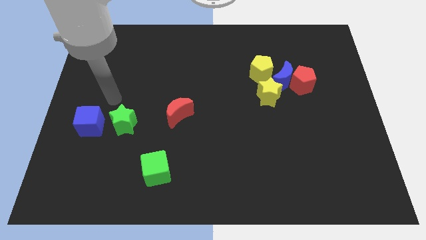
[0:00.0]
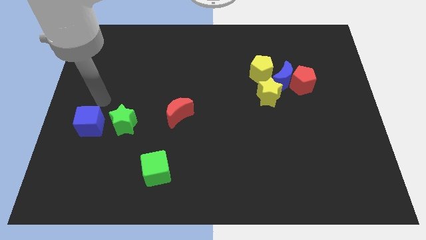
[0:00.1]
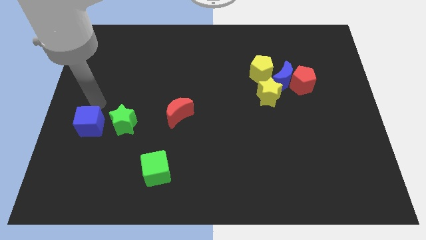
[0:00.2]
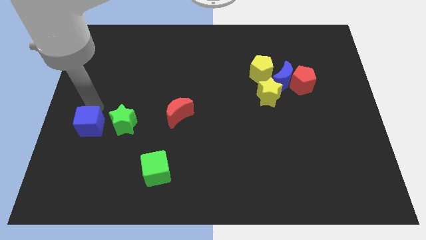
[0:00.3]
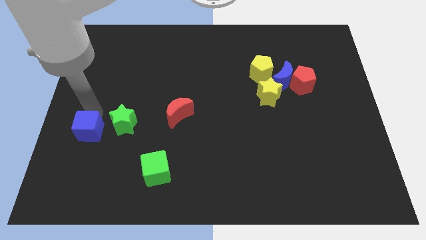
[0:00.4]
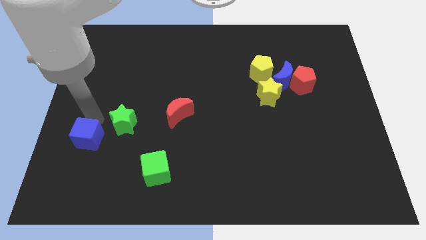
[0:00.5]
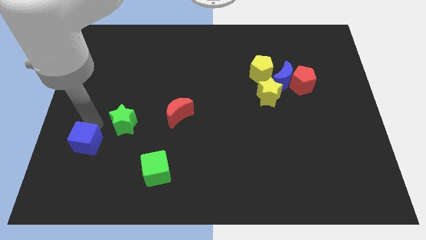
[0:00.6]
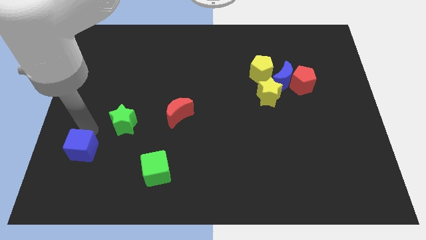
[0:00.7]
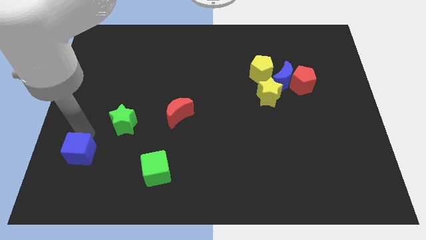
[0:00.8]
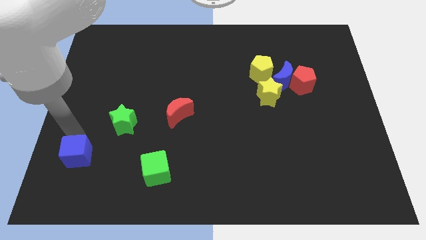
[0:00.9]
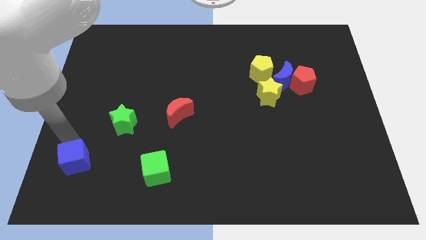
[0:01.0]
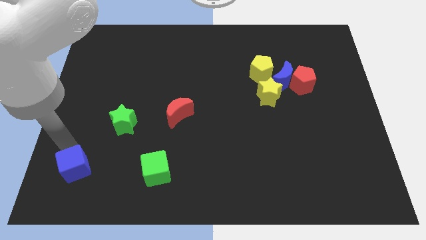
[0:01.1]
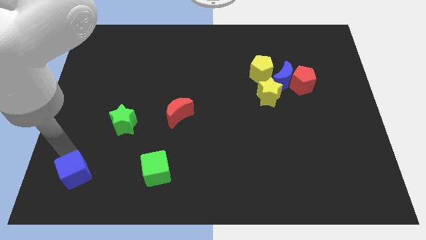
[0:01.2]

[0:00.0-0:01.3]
push the blue cube to the left of the green cube

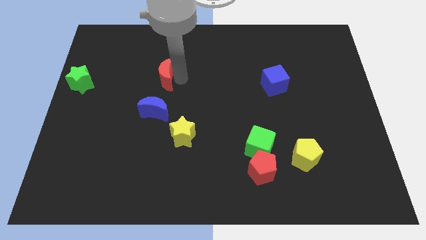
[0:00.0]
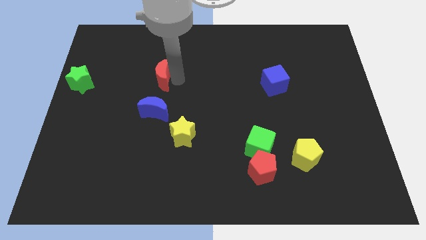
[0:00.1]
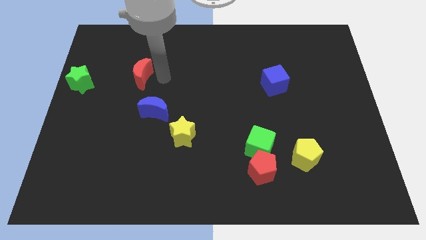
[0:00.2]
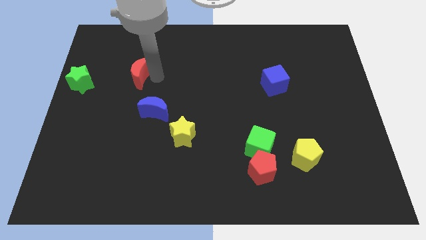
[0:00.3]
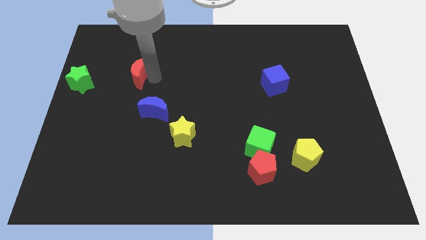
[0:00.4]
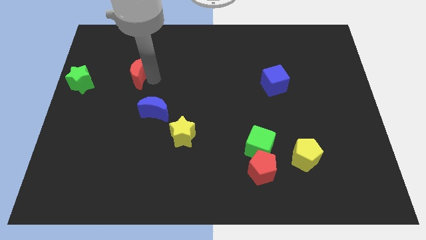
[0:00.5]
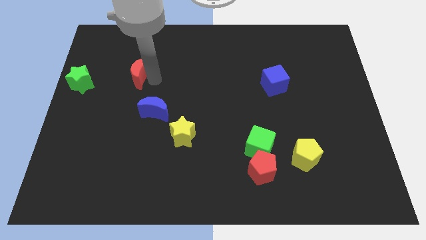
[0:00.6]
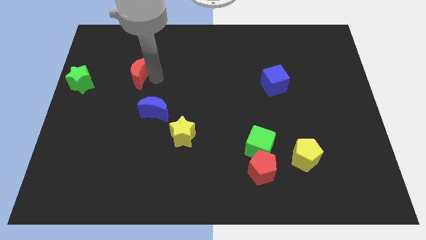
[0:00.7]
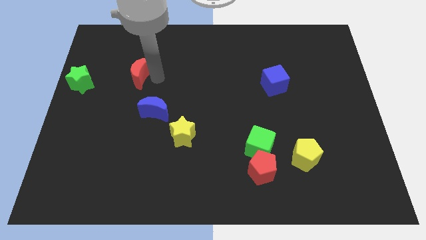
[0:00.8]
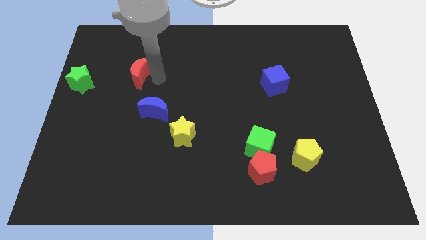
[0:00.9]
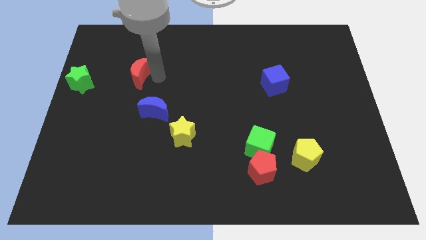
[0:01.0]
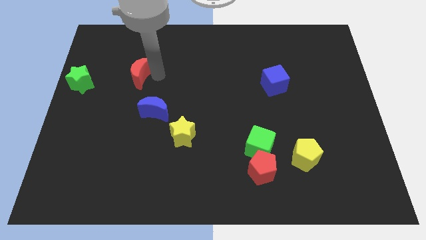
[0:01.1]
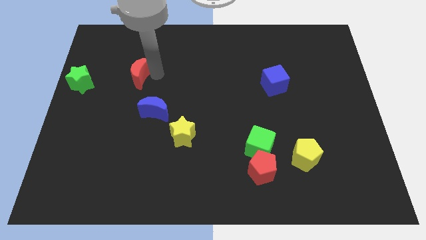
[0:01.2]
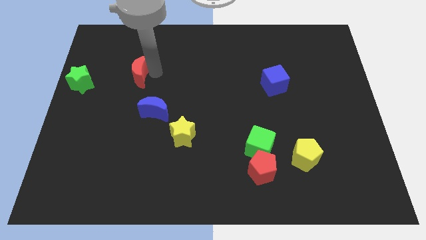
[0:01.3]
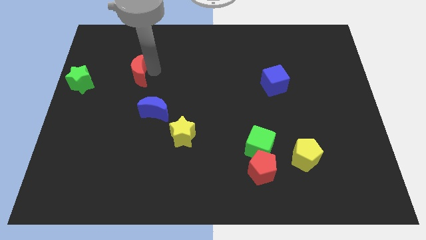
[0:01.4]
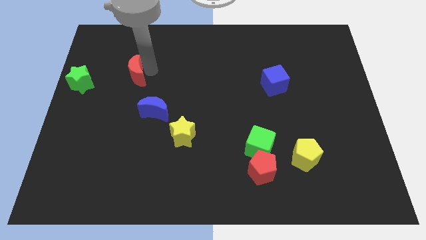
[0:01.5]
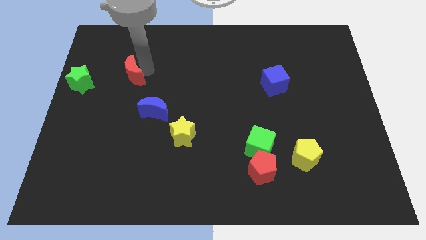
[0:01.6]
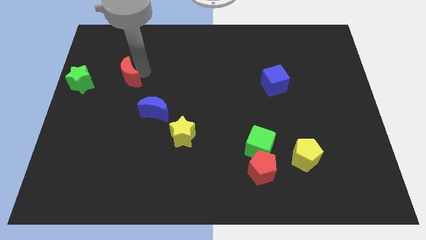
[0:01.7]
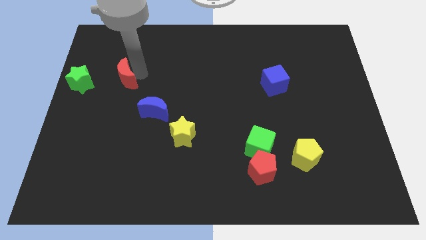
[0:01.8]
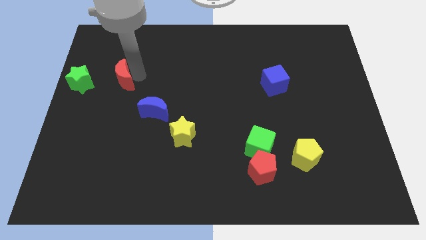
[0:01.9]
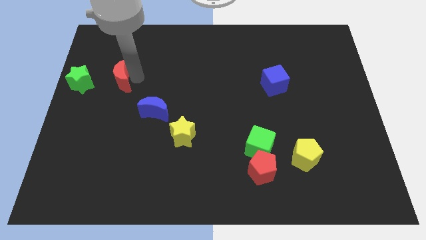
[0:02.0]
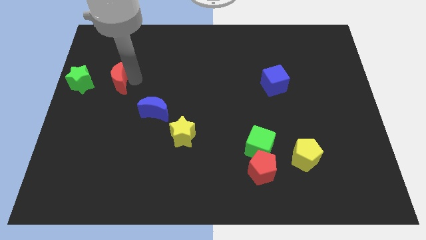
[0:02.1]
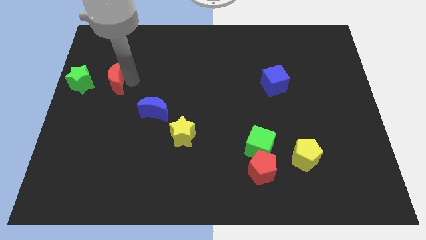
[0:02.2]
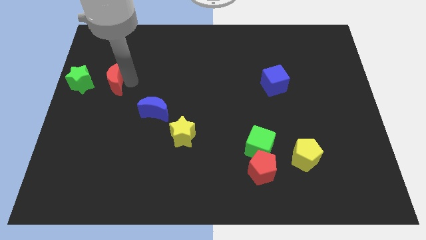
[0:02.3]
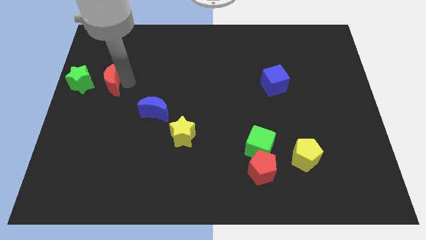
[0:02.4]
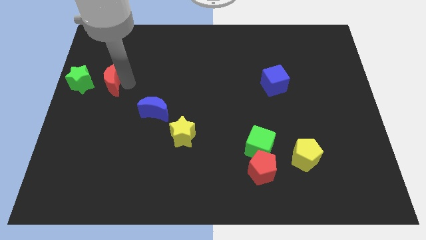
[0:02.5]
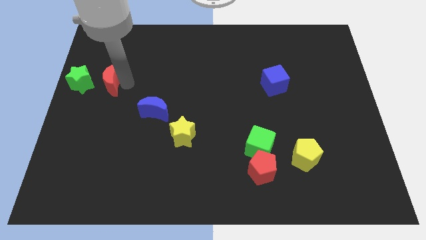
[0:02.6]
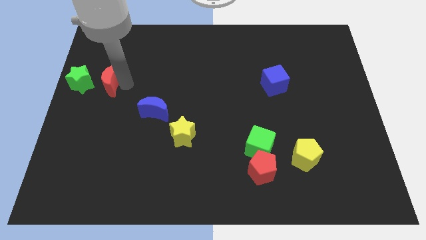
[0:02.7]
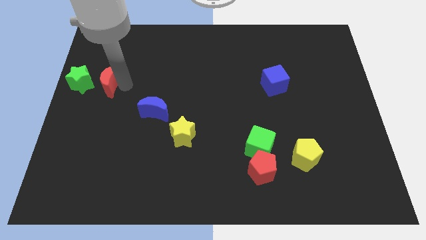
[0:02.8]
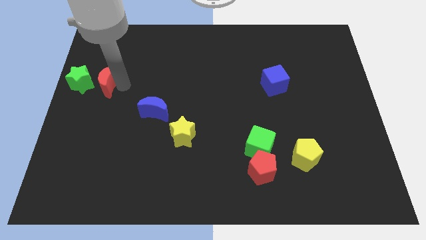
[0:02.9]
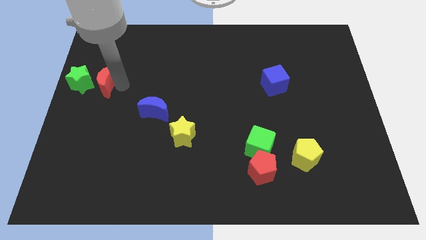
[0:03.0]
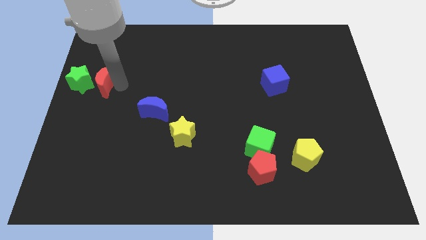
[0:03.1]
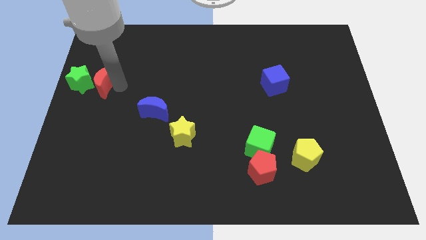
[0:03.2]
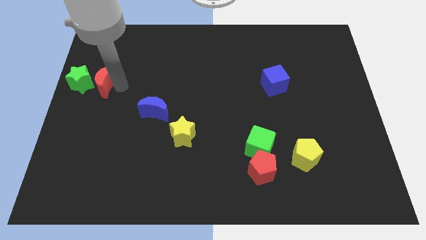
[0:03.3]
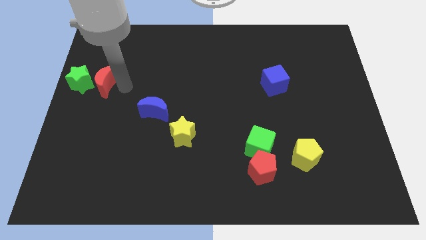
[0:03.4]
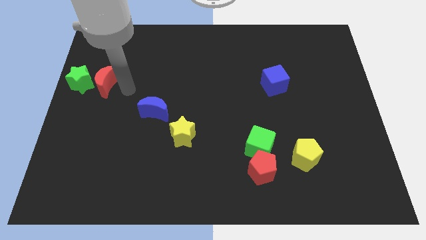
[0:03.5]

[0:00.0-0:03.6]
place red crescent below the green star

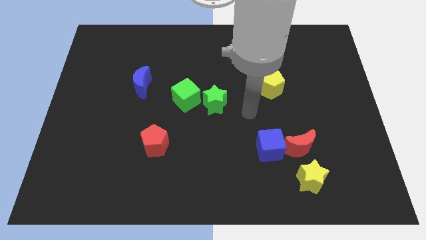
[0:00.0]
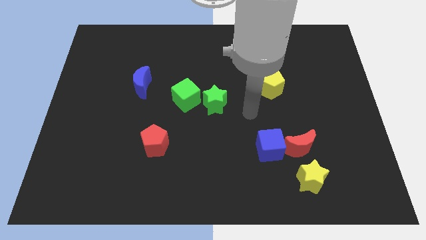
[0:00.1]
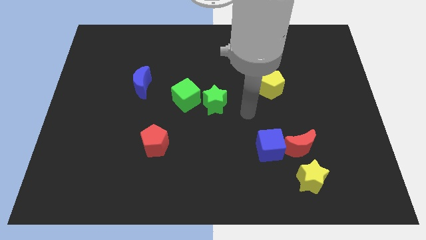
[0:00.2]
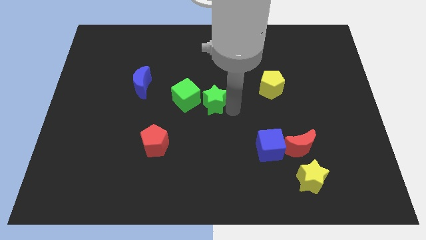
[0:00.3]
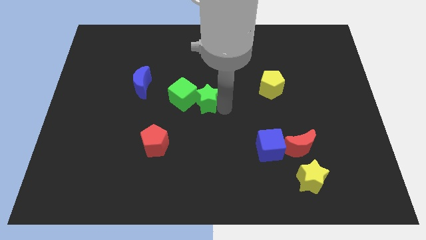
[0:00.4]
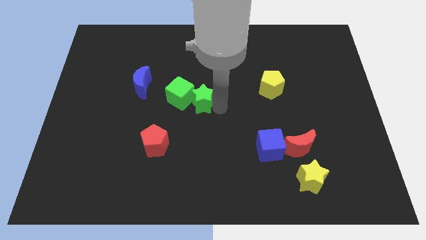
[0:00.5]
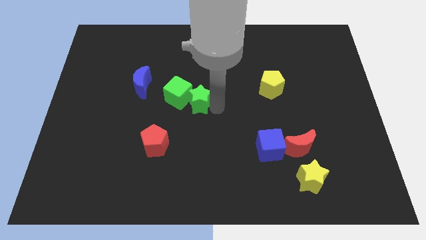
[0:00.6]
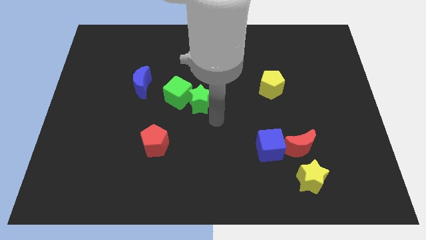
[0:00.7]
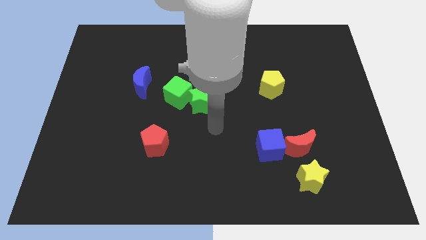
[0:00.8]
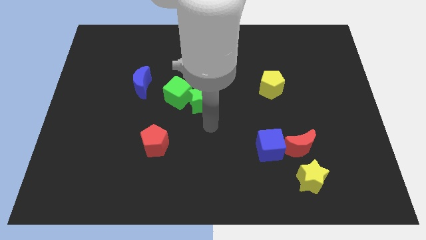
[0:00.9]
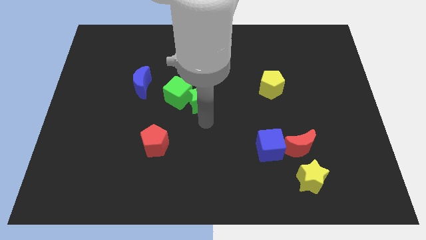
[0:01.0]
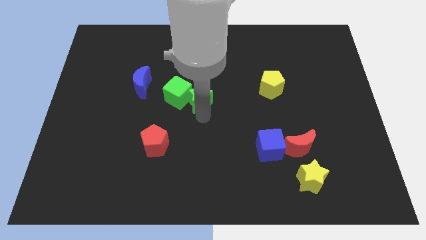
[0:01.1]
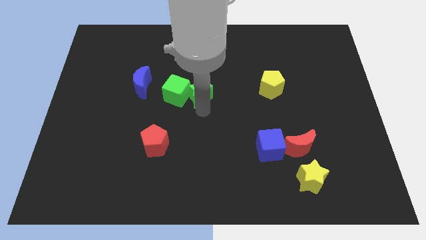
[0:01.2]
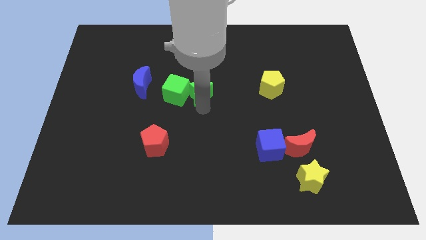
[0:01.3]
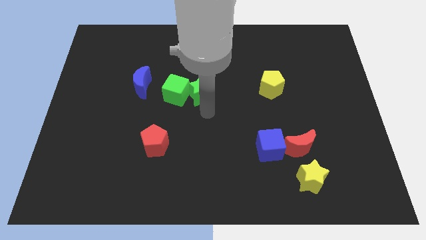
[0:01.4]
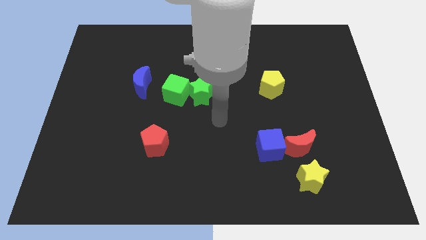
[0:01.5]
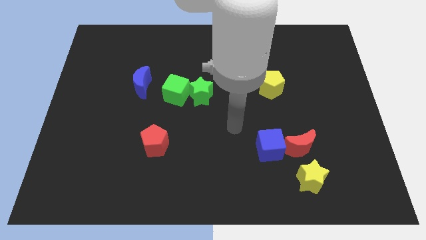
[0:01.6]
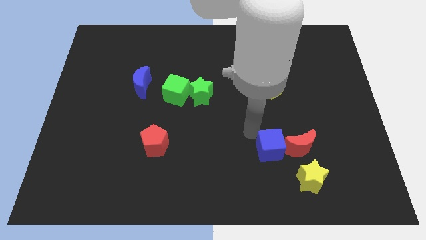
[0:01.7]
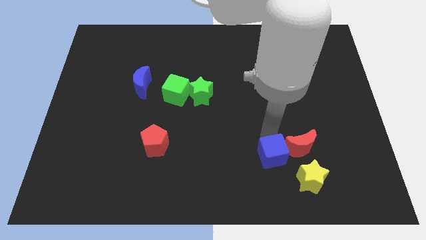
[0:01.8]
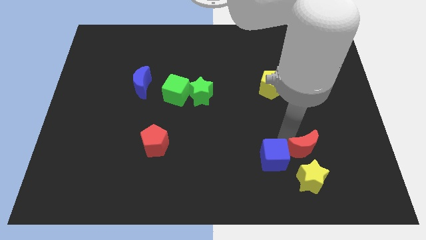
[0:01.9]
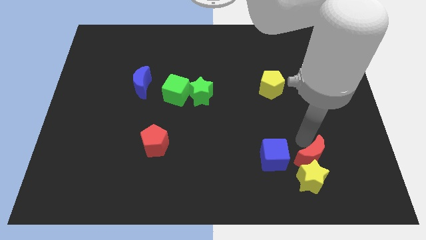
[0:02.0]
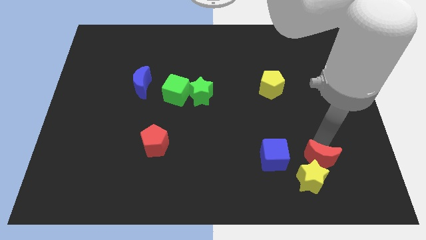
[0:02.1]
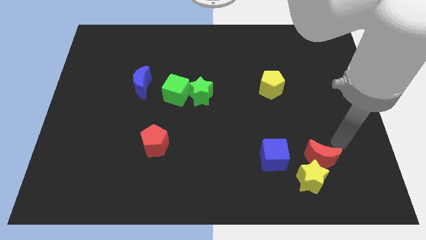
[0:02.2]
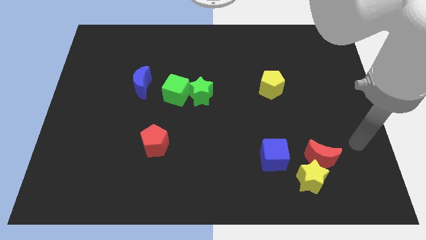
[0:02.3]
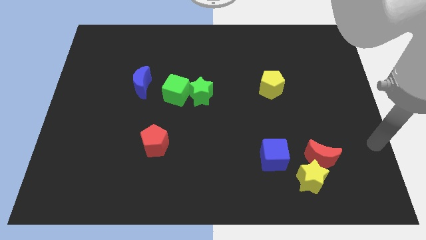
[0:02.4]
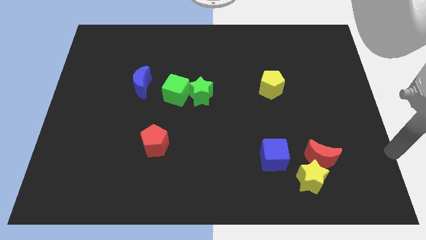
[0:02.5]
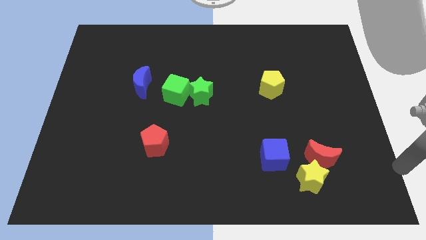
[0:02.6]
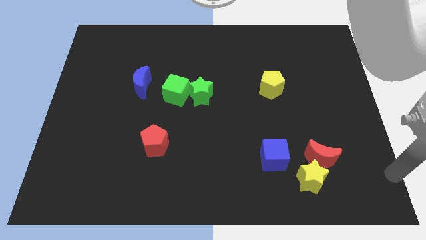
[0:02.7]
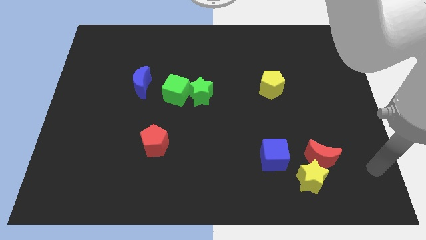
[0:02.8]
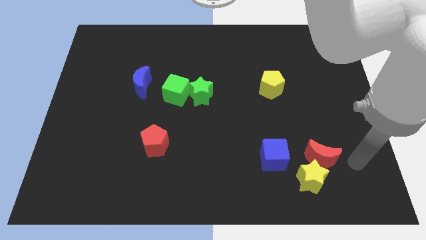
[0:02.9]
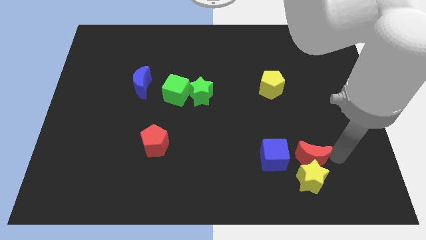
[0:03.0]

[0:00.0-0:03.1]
place your arm to the right side of the red moon

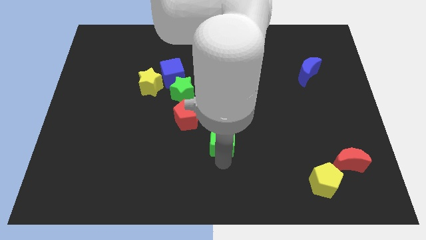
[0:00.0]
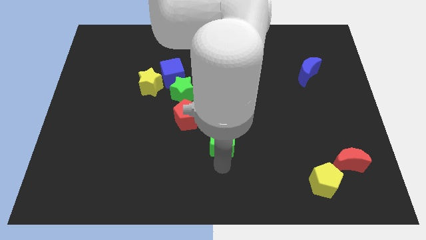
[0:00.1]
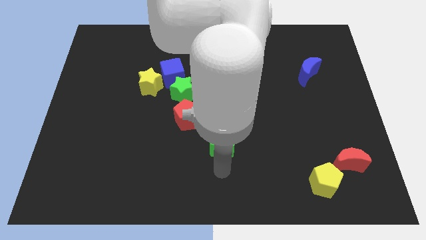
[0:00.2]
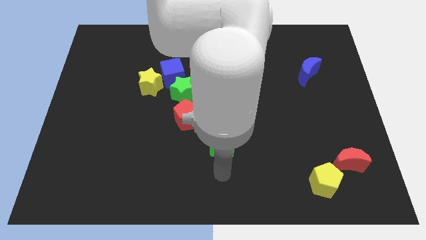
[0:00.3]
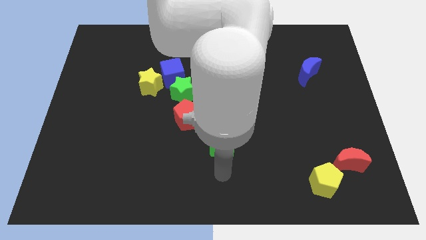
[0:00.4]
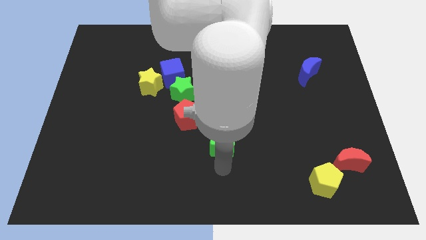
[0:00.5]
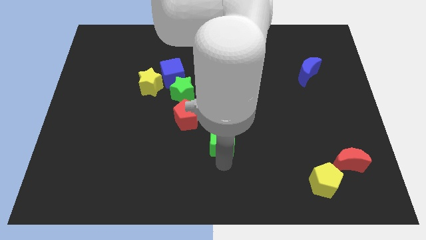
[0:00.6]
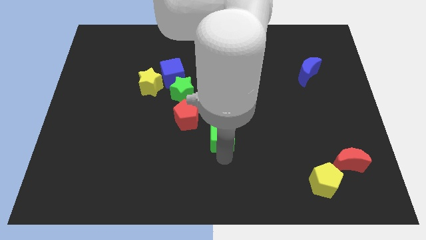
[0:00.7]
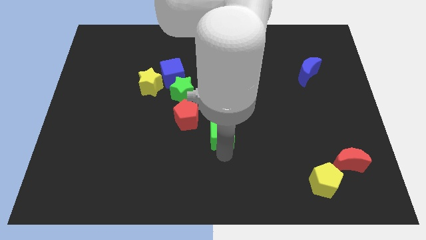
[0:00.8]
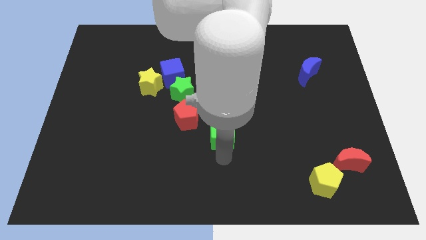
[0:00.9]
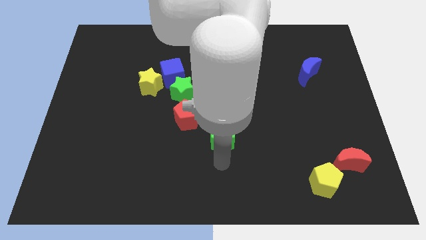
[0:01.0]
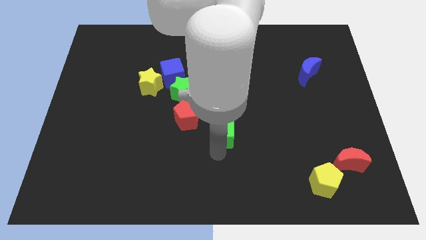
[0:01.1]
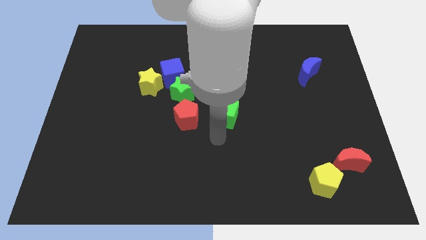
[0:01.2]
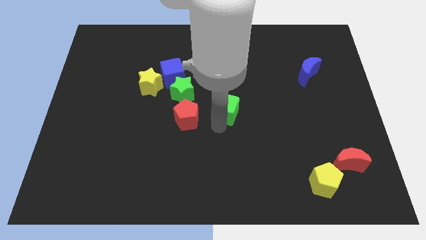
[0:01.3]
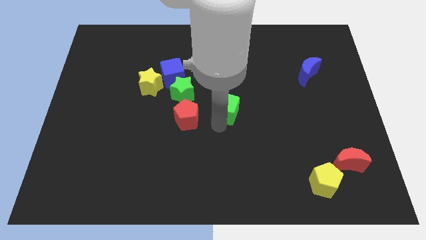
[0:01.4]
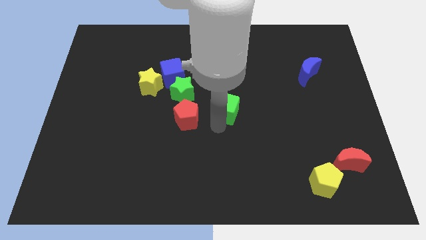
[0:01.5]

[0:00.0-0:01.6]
put the green cube right to the red pentagon
